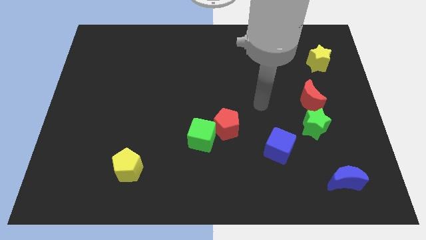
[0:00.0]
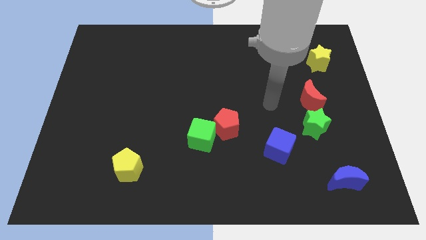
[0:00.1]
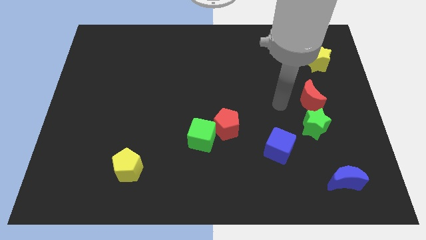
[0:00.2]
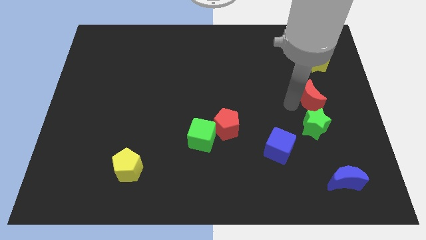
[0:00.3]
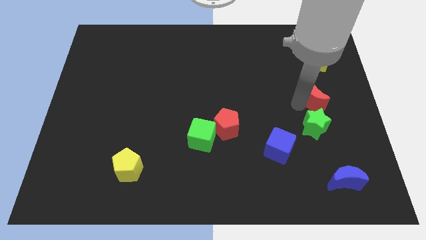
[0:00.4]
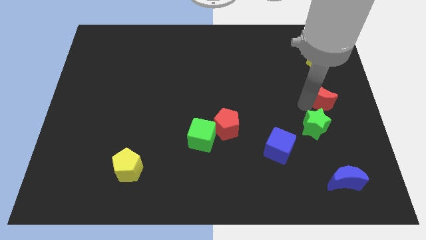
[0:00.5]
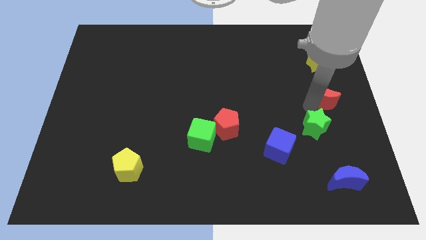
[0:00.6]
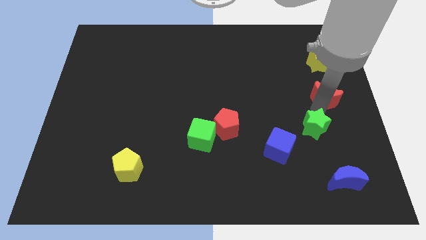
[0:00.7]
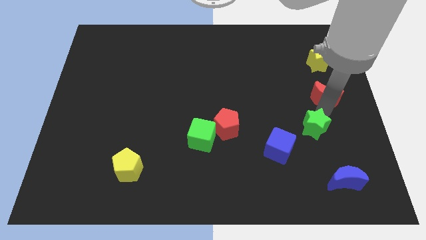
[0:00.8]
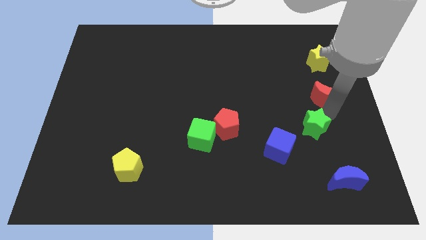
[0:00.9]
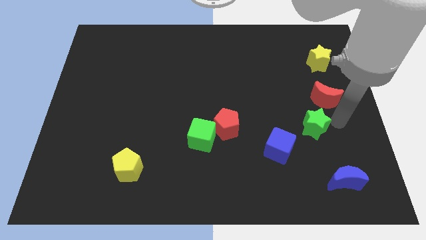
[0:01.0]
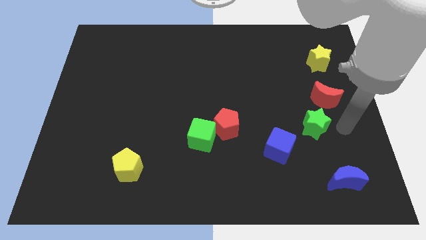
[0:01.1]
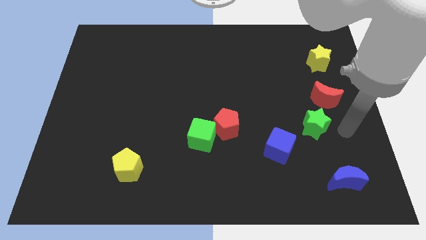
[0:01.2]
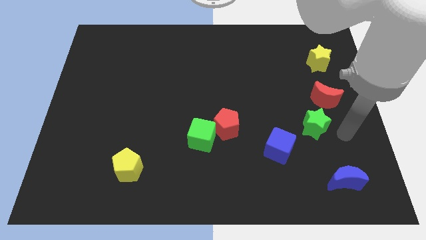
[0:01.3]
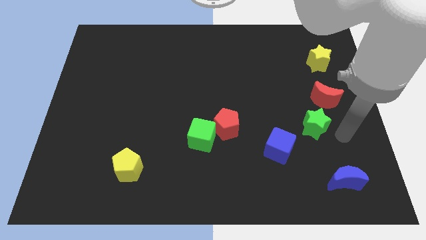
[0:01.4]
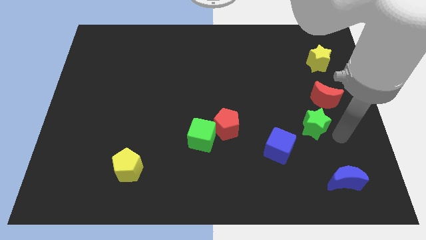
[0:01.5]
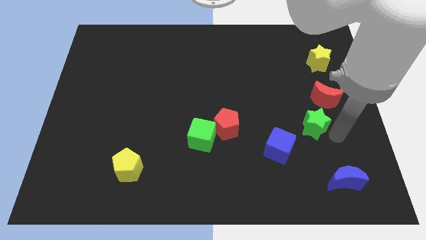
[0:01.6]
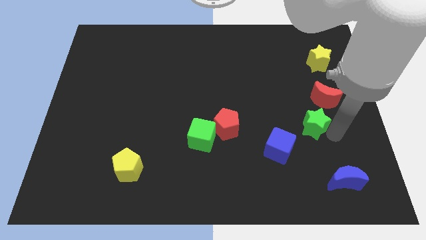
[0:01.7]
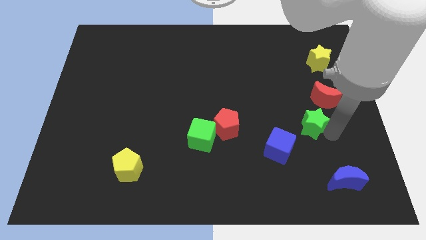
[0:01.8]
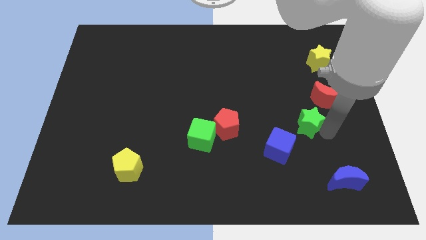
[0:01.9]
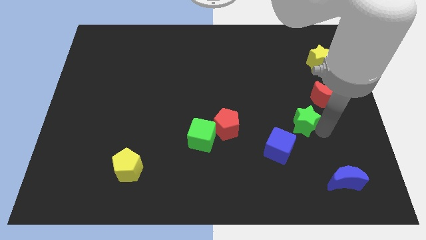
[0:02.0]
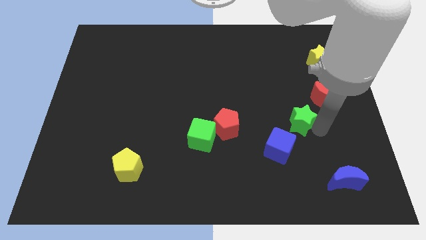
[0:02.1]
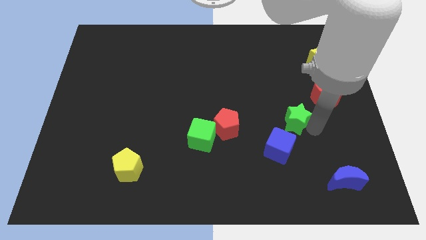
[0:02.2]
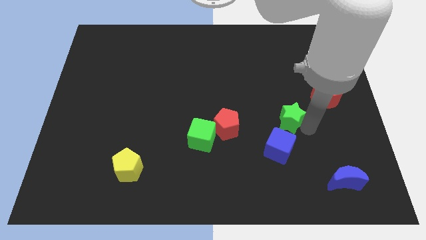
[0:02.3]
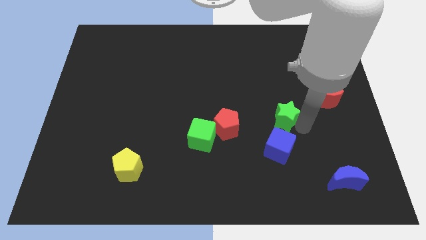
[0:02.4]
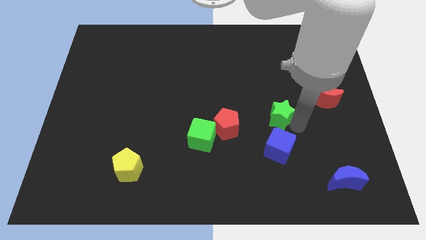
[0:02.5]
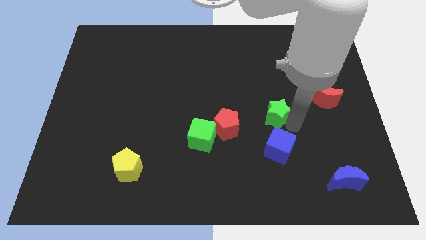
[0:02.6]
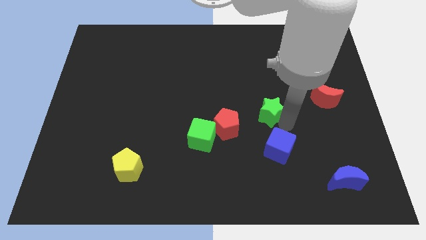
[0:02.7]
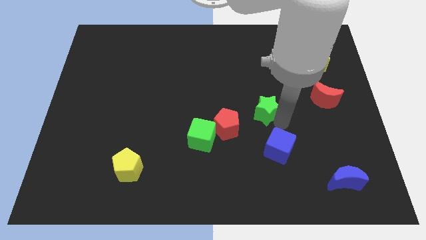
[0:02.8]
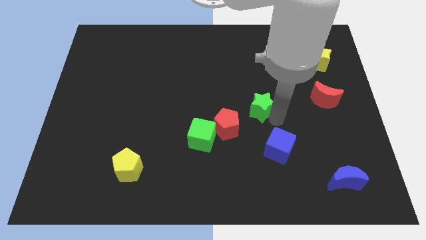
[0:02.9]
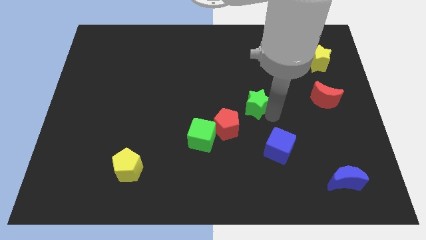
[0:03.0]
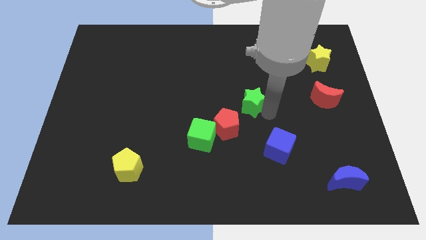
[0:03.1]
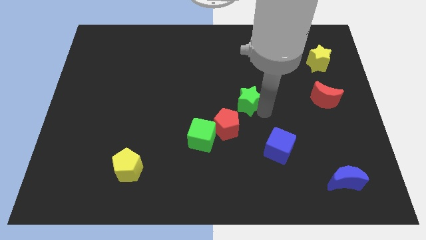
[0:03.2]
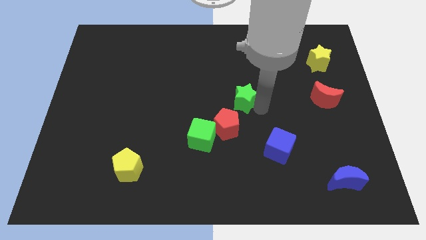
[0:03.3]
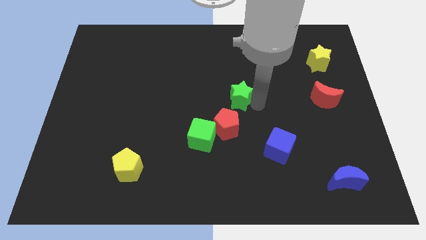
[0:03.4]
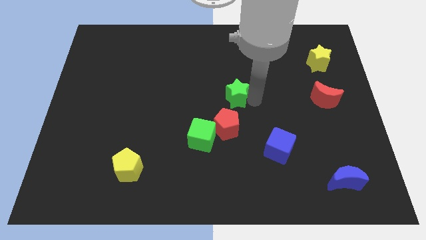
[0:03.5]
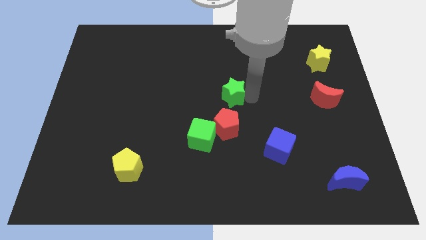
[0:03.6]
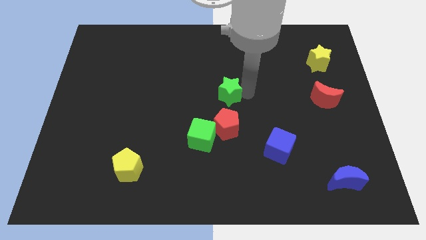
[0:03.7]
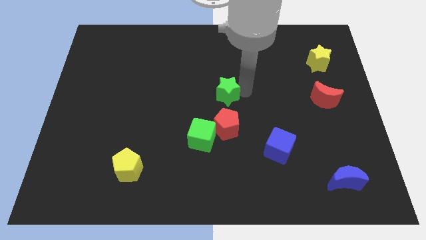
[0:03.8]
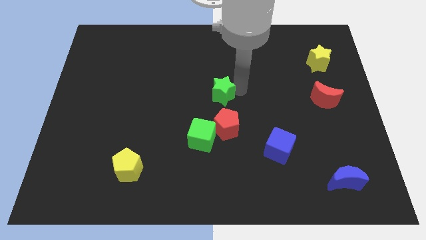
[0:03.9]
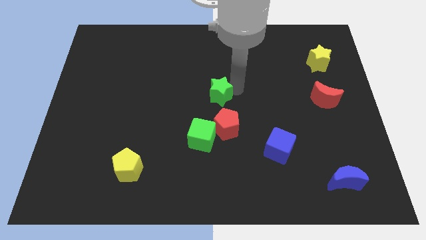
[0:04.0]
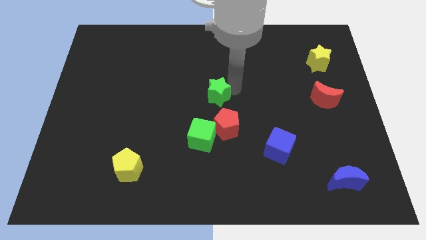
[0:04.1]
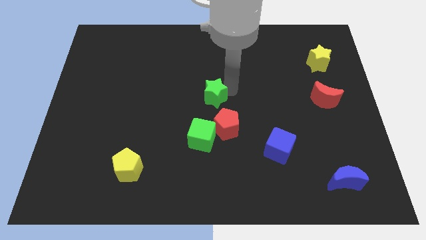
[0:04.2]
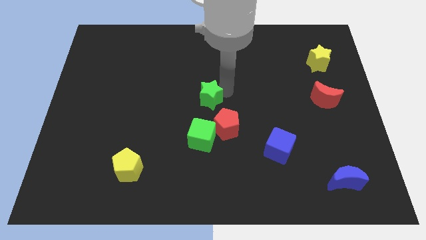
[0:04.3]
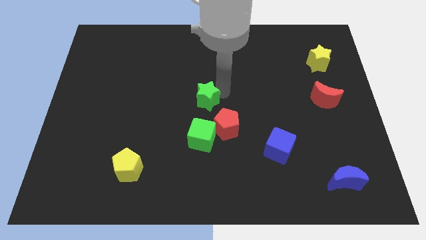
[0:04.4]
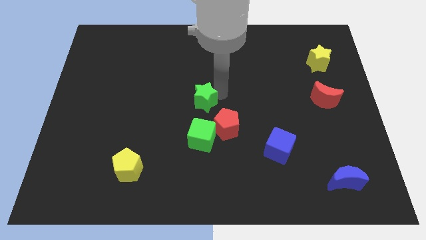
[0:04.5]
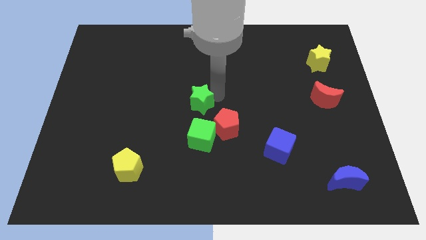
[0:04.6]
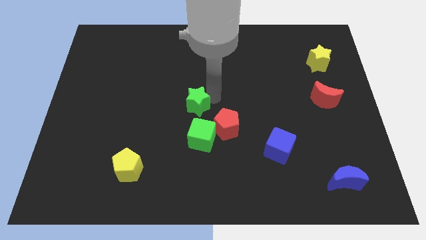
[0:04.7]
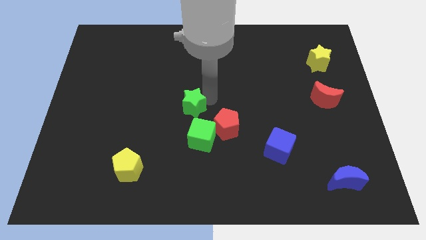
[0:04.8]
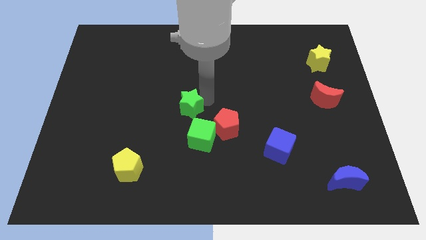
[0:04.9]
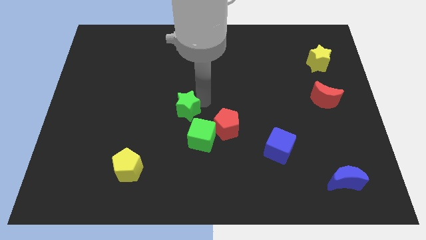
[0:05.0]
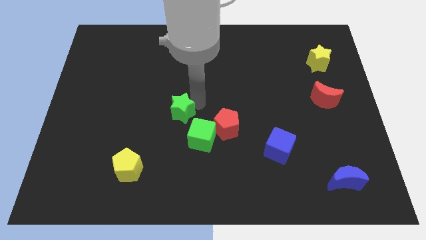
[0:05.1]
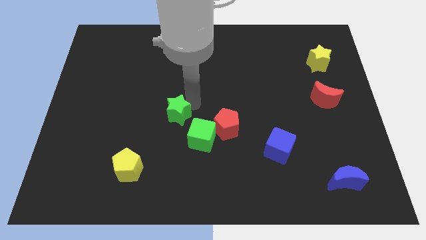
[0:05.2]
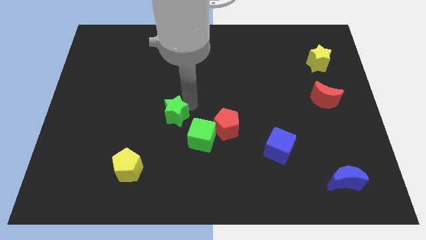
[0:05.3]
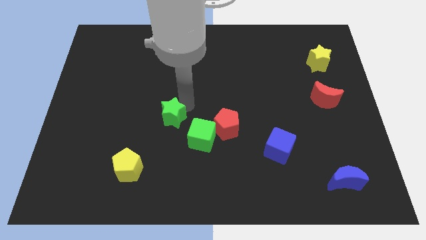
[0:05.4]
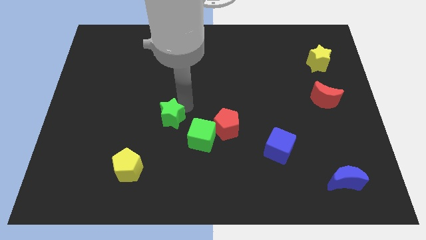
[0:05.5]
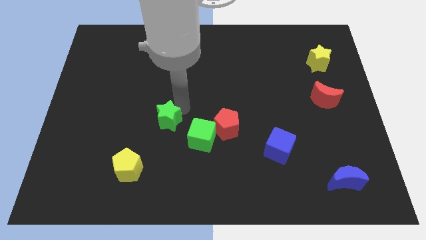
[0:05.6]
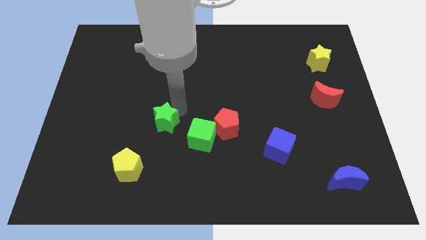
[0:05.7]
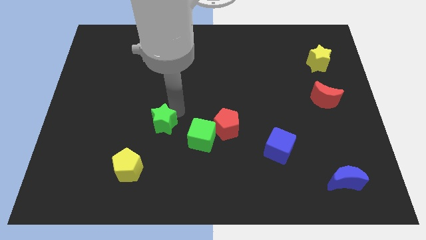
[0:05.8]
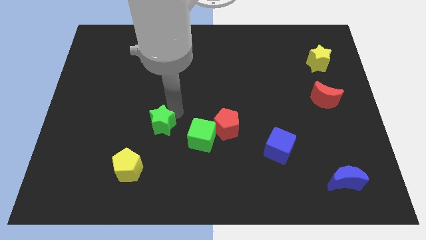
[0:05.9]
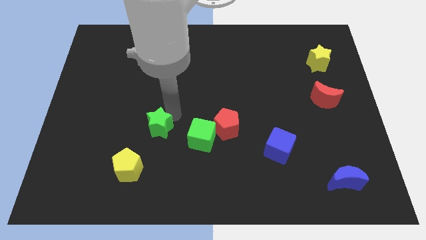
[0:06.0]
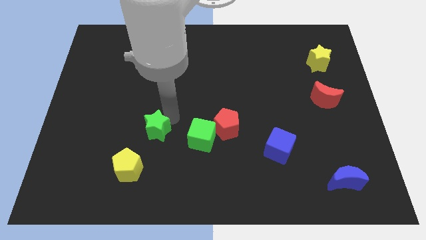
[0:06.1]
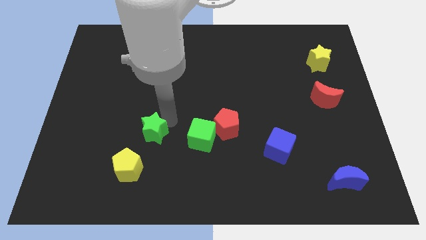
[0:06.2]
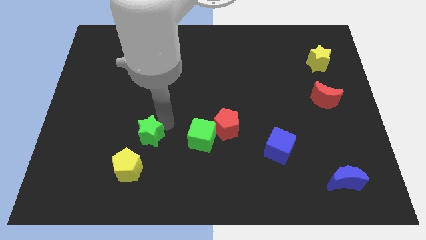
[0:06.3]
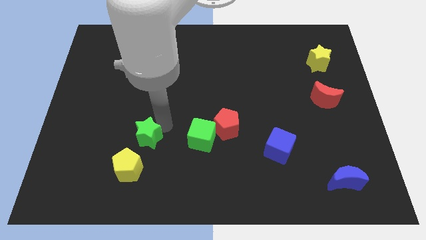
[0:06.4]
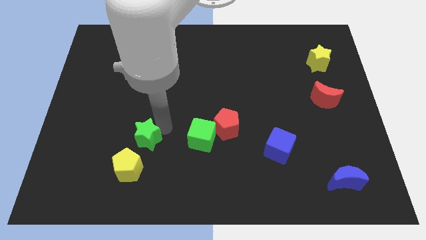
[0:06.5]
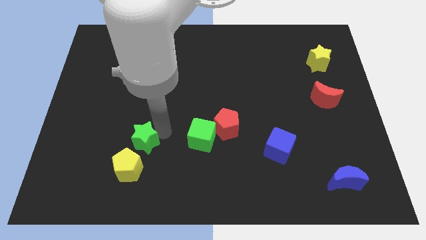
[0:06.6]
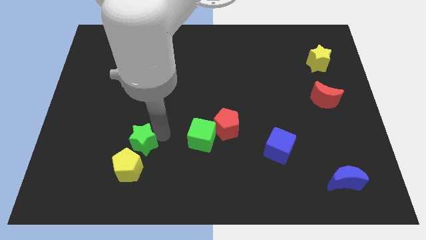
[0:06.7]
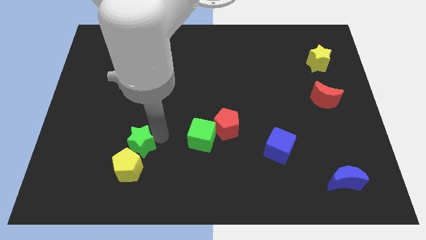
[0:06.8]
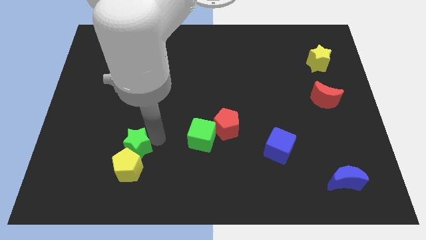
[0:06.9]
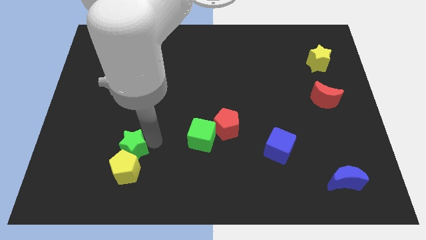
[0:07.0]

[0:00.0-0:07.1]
put the green star towards the yellow pentagon

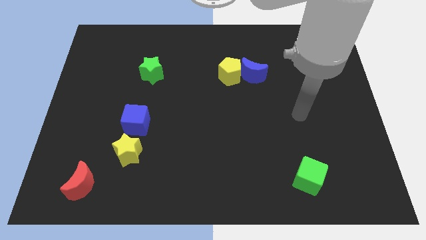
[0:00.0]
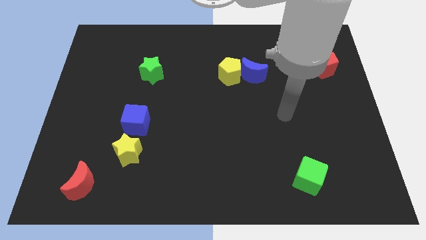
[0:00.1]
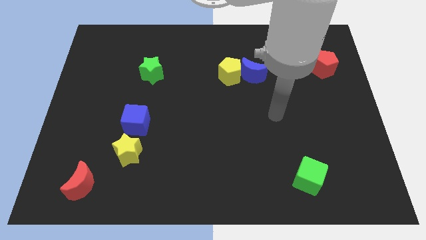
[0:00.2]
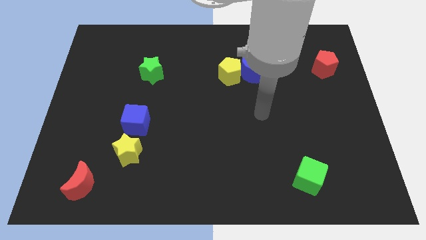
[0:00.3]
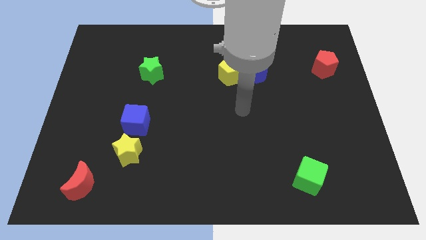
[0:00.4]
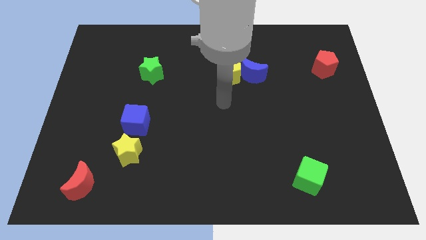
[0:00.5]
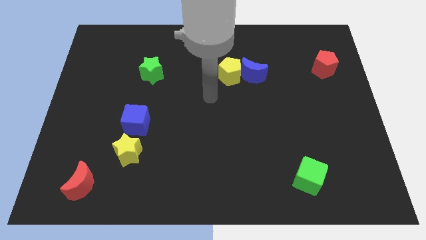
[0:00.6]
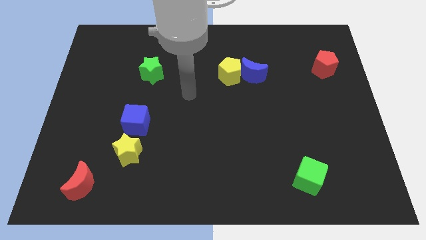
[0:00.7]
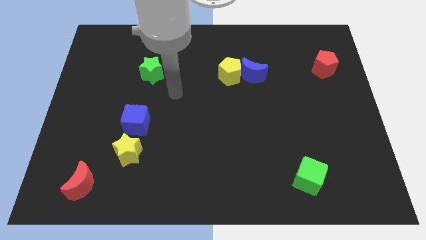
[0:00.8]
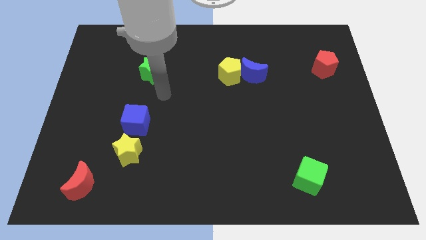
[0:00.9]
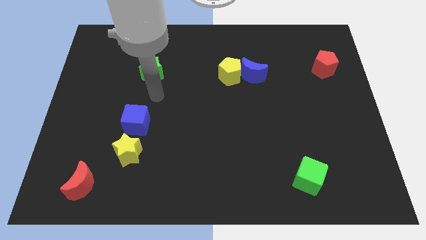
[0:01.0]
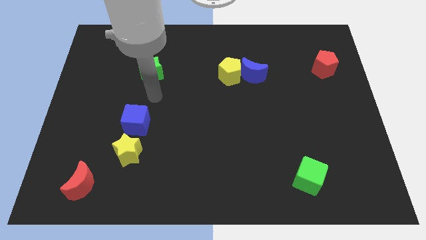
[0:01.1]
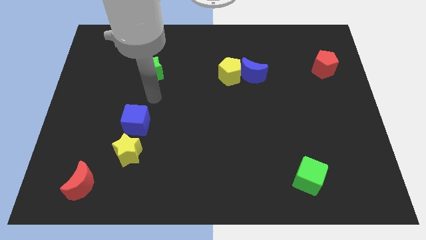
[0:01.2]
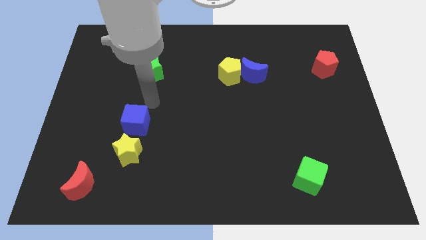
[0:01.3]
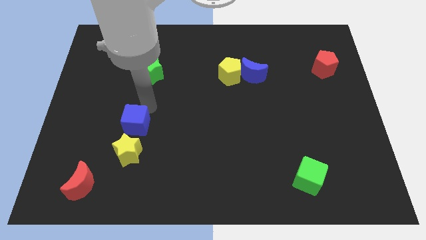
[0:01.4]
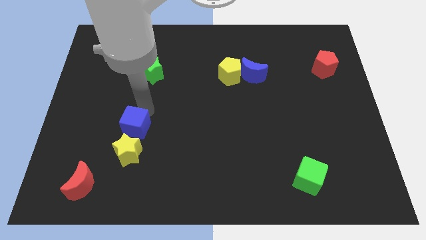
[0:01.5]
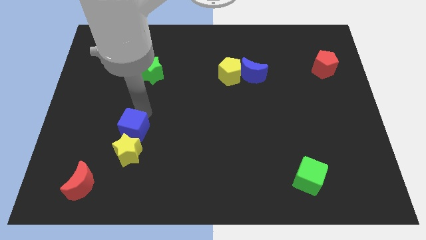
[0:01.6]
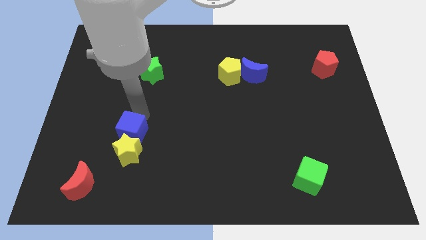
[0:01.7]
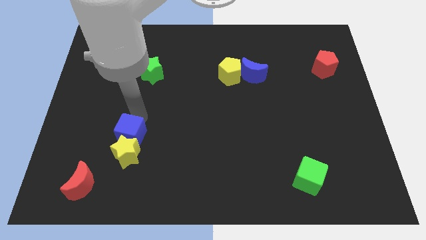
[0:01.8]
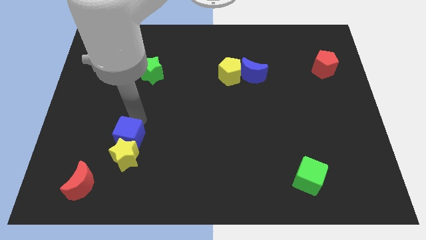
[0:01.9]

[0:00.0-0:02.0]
push the blue cube to the yellow star
